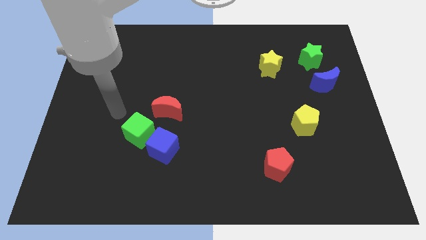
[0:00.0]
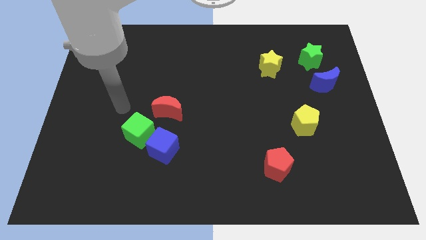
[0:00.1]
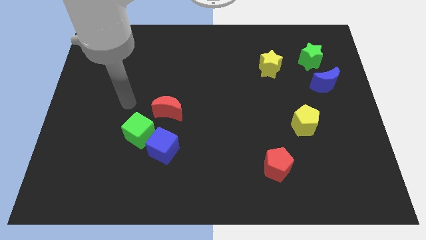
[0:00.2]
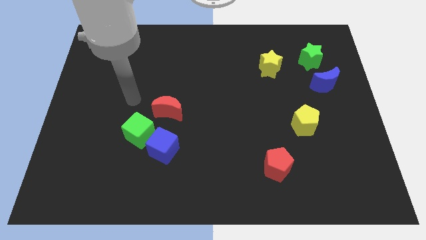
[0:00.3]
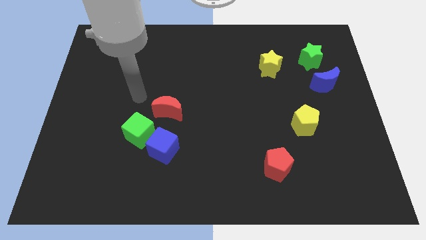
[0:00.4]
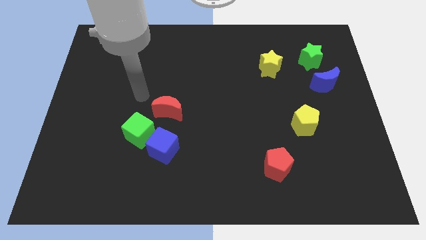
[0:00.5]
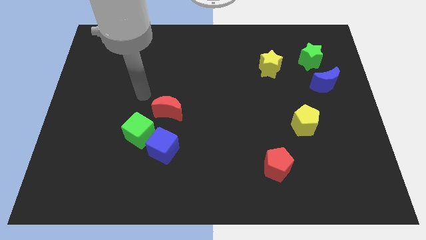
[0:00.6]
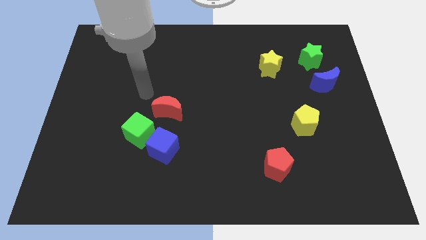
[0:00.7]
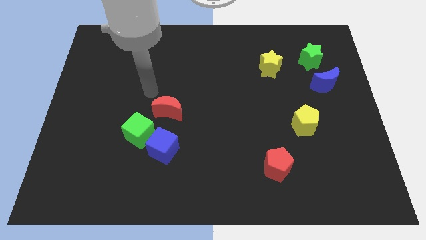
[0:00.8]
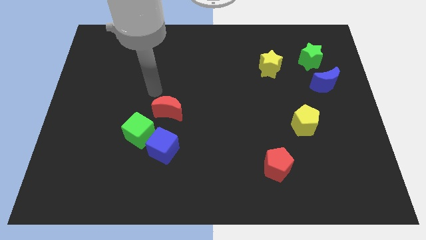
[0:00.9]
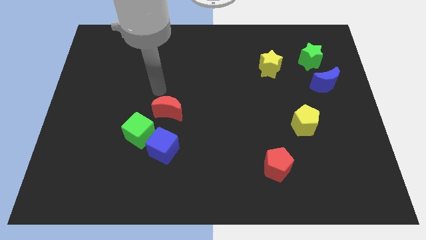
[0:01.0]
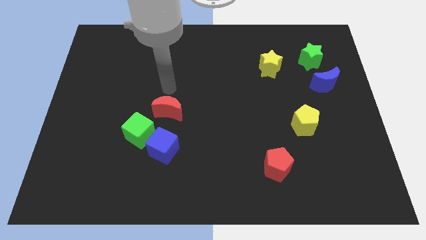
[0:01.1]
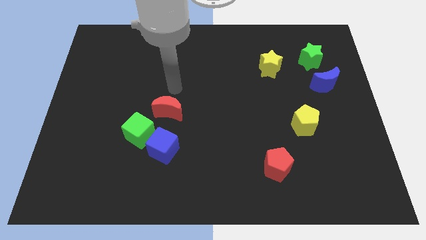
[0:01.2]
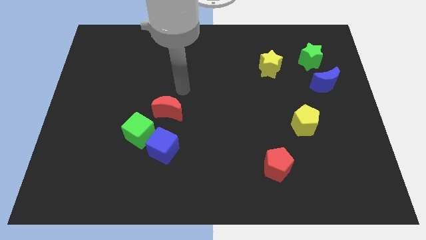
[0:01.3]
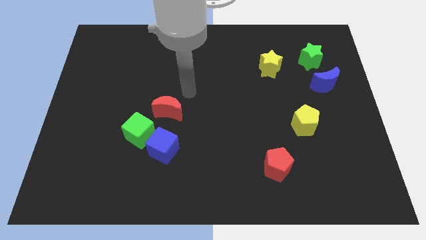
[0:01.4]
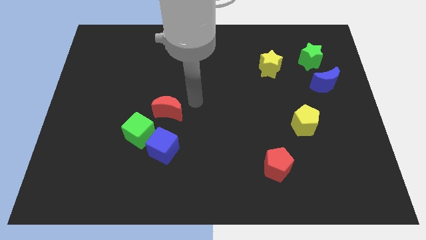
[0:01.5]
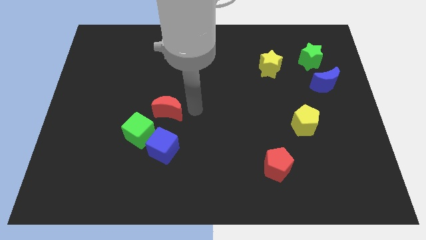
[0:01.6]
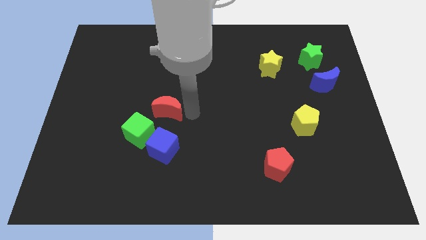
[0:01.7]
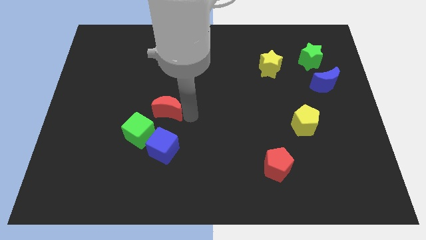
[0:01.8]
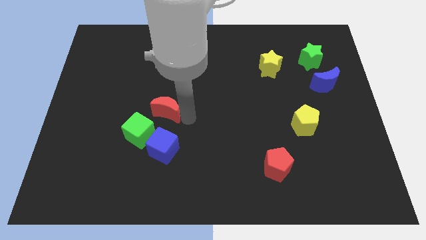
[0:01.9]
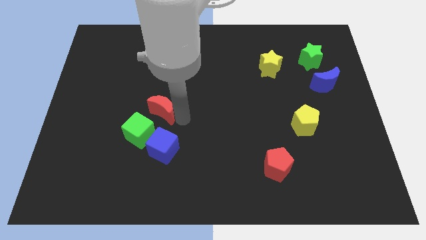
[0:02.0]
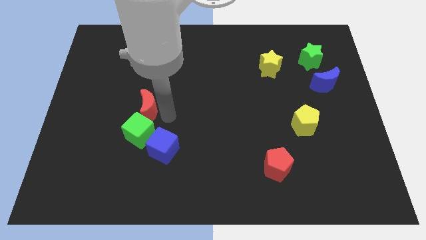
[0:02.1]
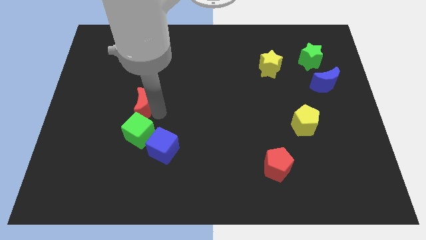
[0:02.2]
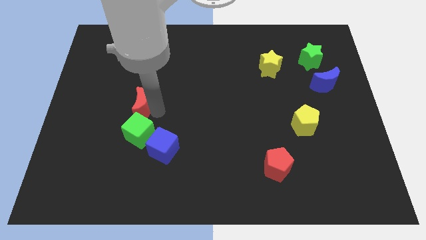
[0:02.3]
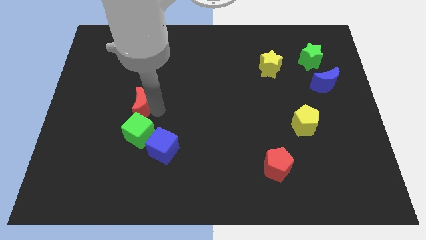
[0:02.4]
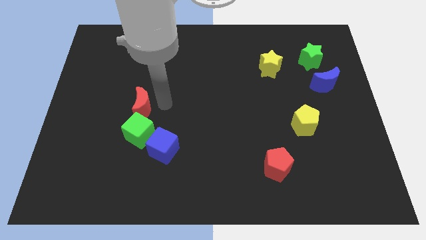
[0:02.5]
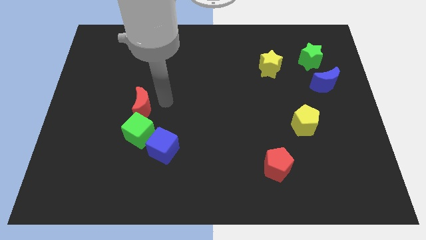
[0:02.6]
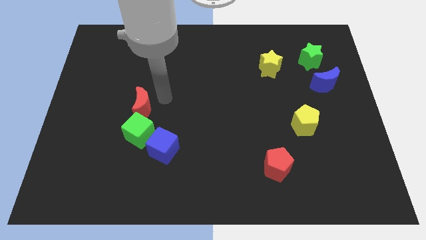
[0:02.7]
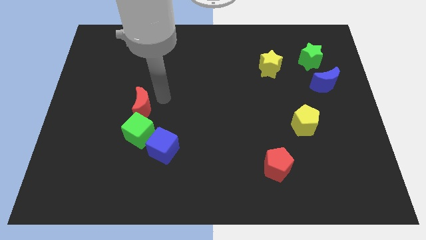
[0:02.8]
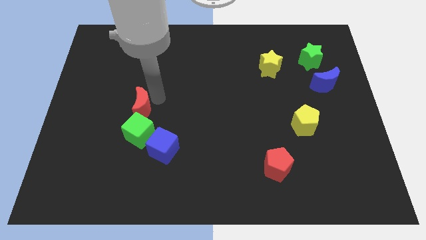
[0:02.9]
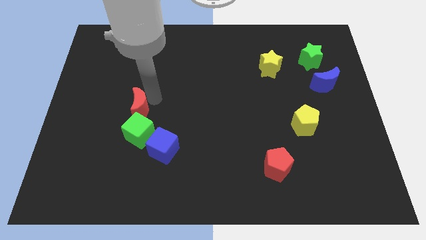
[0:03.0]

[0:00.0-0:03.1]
move red moon on top of green cube

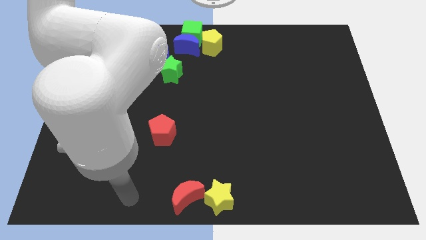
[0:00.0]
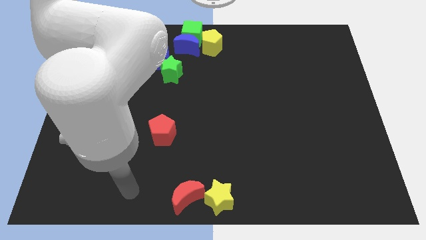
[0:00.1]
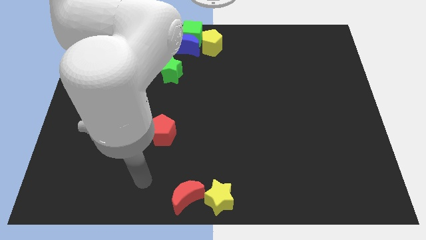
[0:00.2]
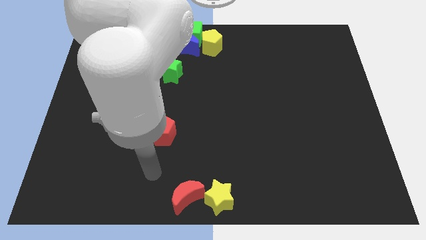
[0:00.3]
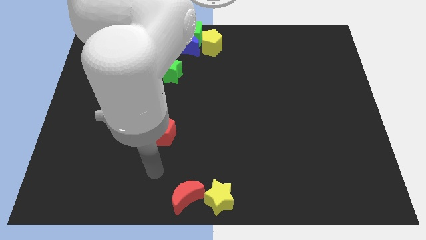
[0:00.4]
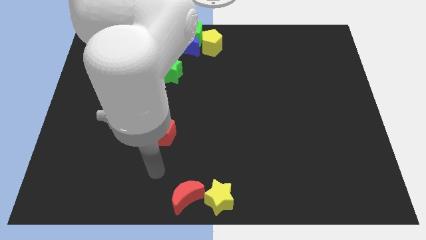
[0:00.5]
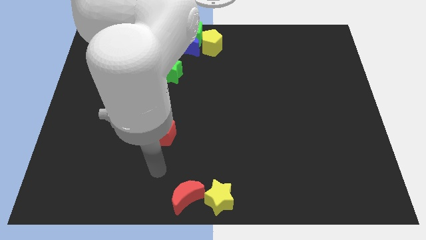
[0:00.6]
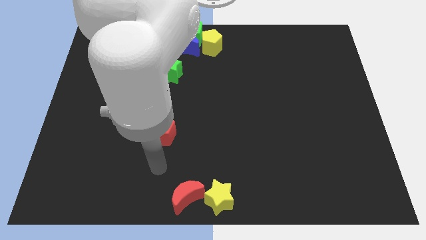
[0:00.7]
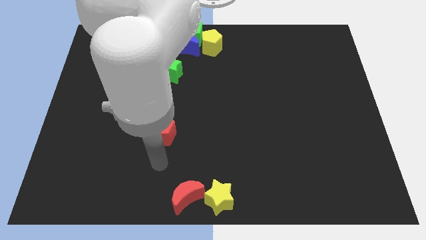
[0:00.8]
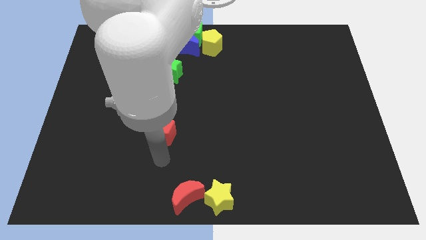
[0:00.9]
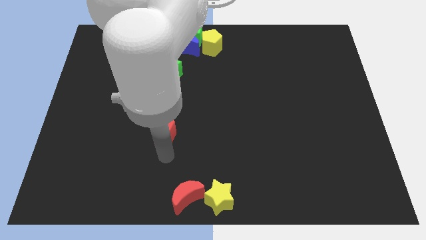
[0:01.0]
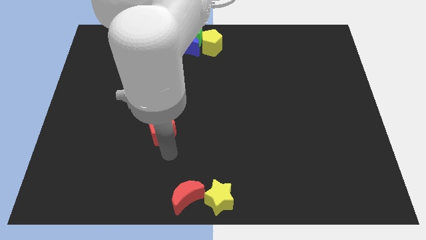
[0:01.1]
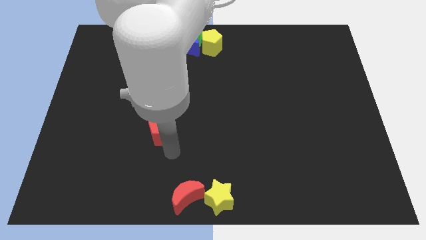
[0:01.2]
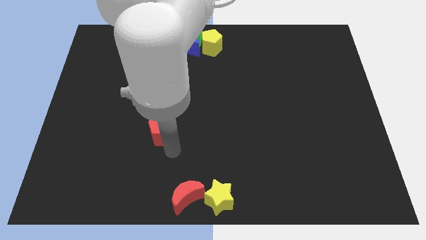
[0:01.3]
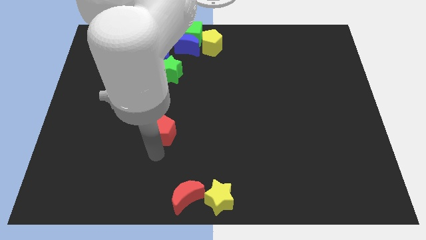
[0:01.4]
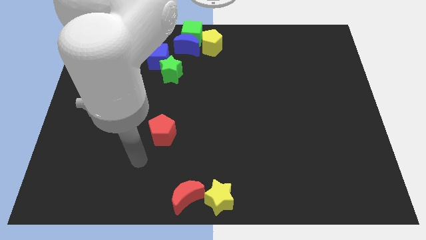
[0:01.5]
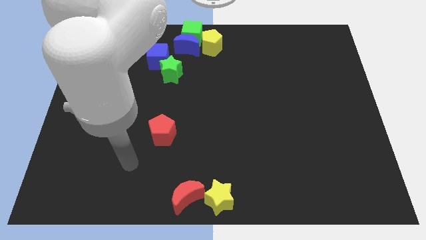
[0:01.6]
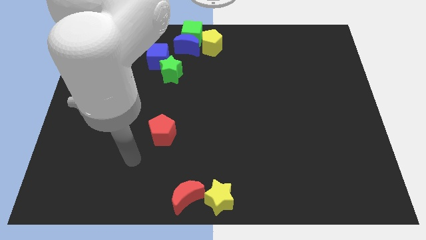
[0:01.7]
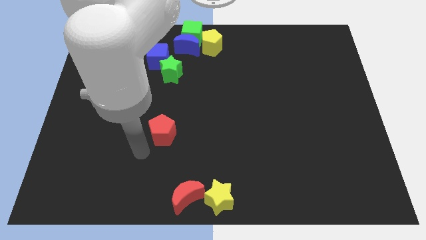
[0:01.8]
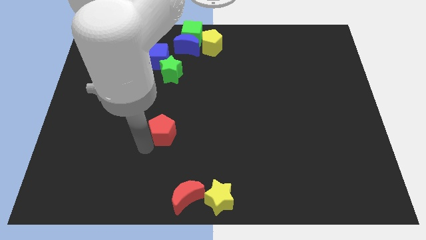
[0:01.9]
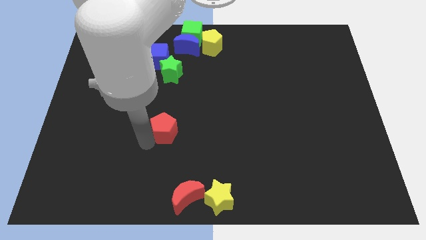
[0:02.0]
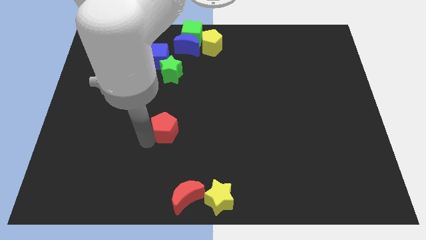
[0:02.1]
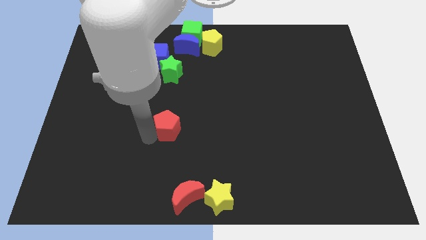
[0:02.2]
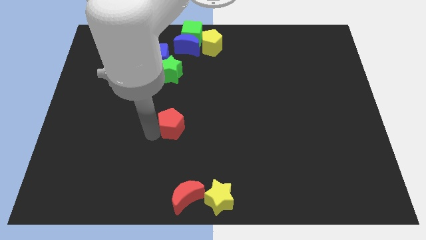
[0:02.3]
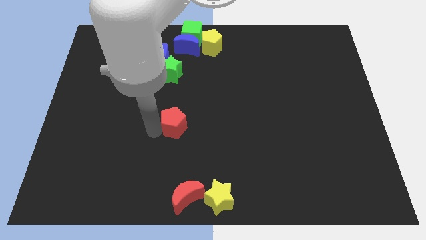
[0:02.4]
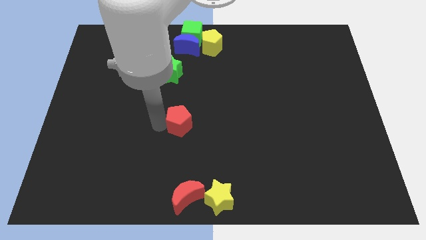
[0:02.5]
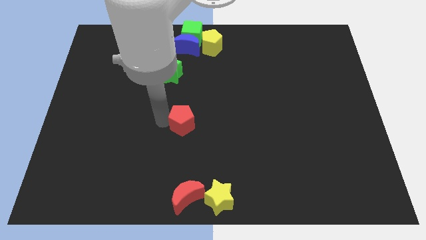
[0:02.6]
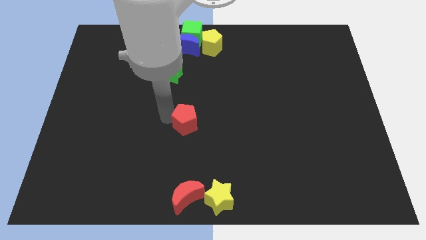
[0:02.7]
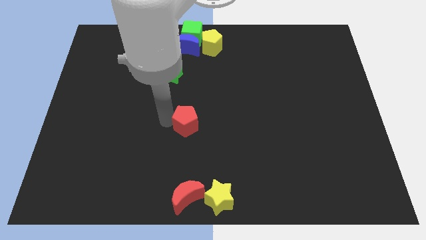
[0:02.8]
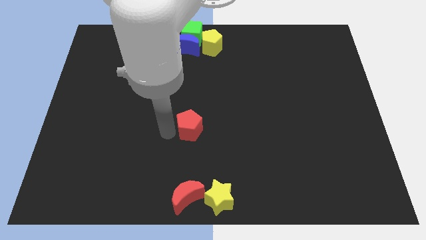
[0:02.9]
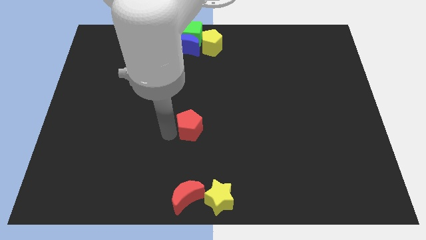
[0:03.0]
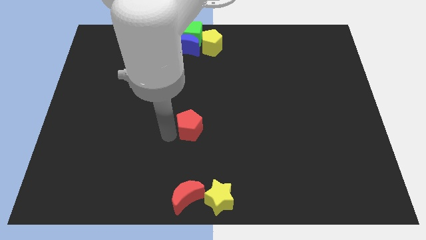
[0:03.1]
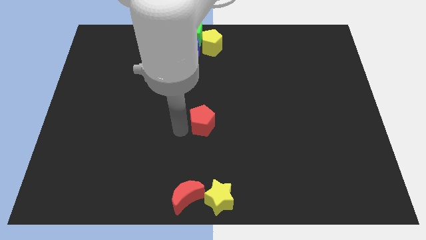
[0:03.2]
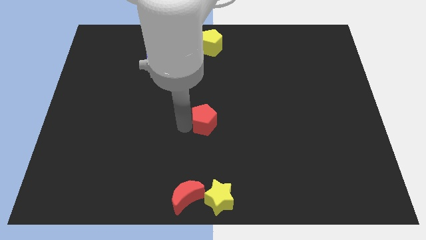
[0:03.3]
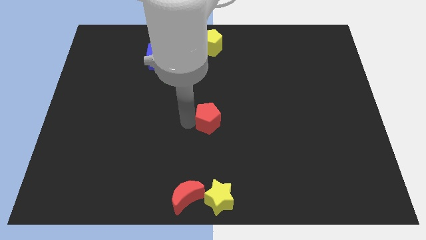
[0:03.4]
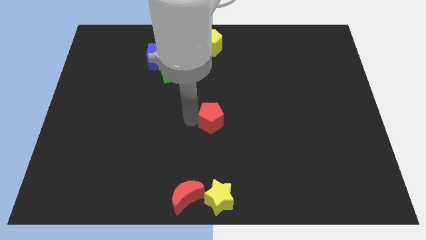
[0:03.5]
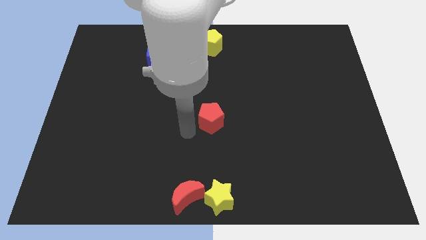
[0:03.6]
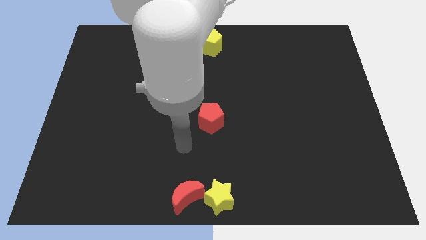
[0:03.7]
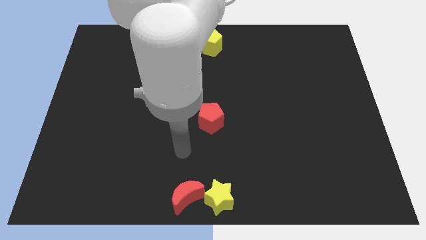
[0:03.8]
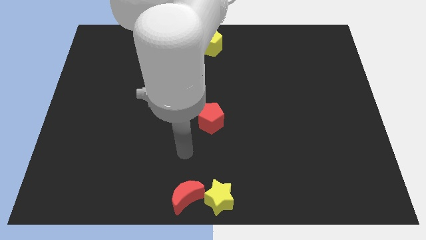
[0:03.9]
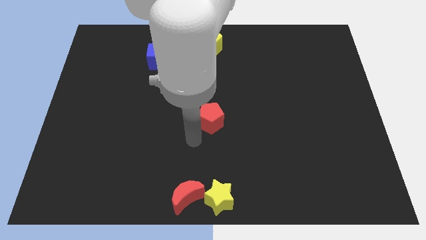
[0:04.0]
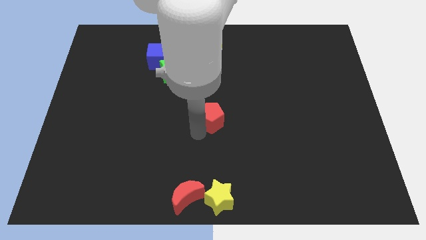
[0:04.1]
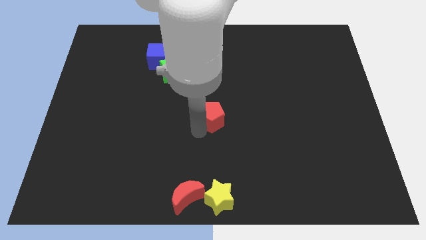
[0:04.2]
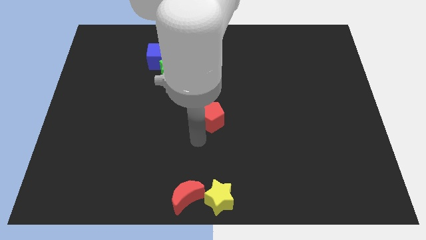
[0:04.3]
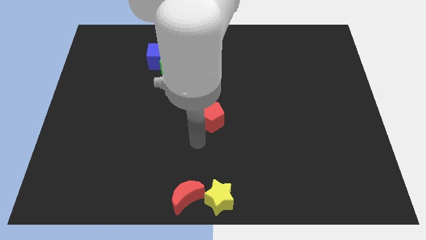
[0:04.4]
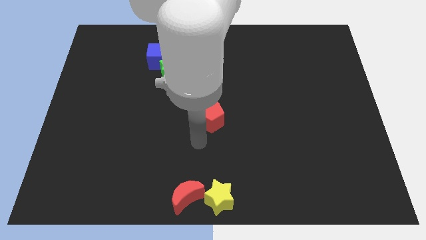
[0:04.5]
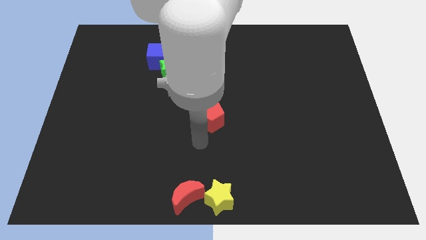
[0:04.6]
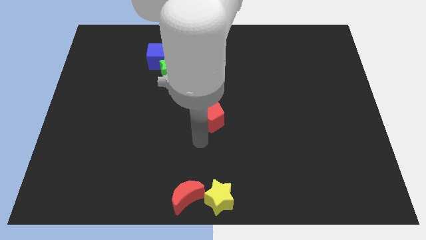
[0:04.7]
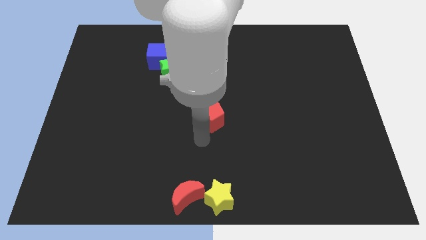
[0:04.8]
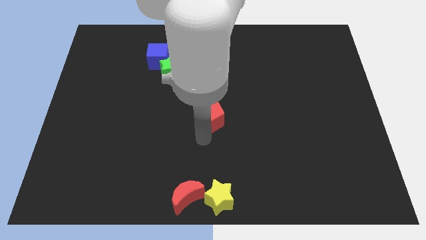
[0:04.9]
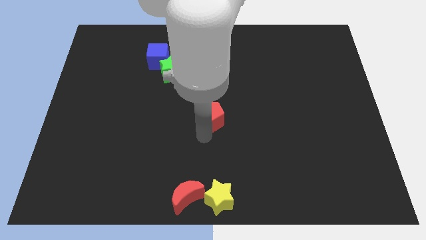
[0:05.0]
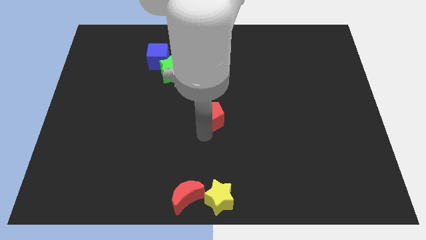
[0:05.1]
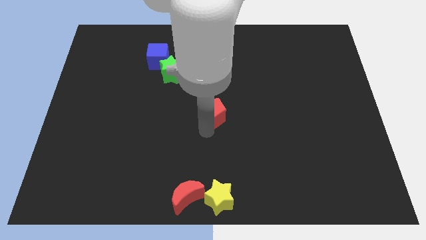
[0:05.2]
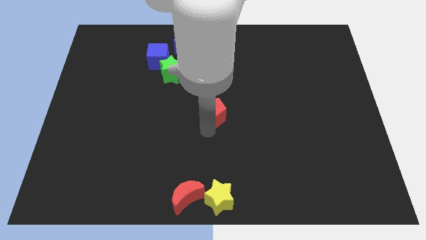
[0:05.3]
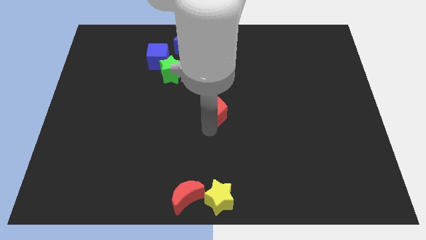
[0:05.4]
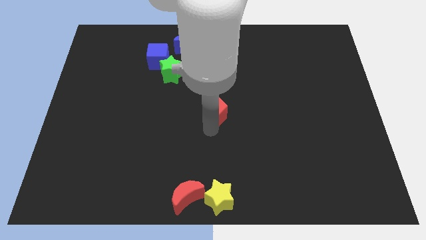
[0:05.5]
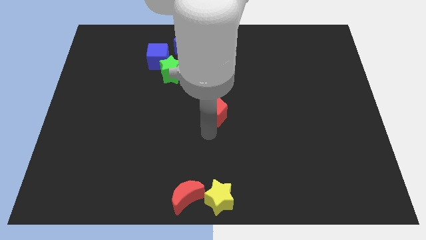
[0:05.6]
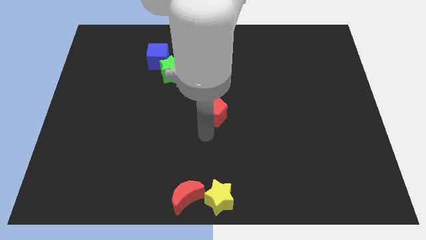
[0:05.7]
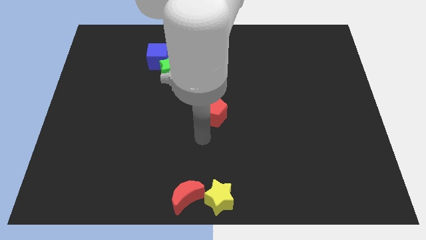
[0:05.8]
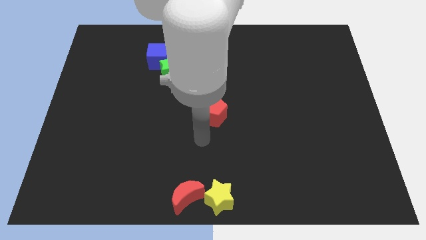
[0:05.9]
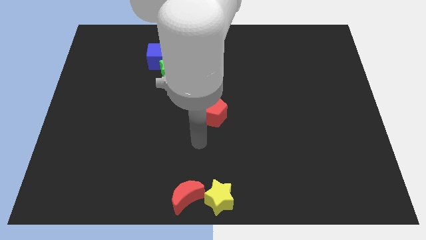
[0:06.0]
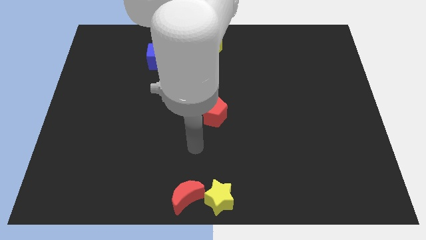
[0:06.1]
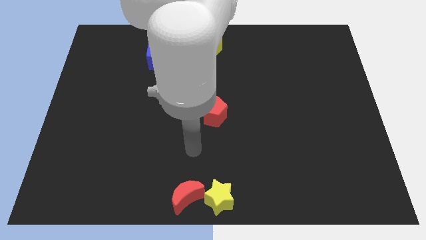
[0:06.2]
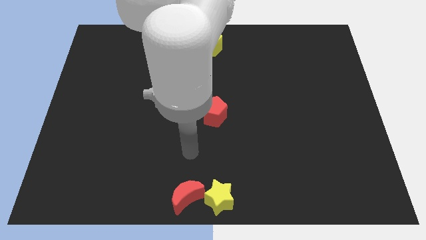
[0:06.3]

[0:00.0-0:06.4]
put the red pentagon in between the yellow pentagon and yellow star
